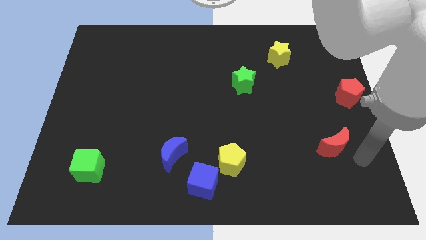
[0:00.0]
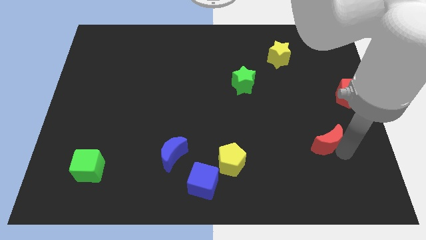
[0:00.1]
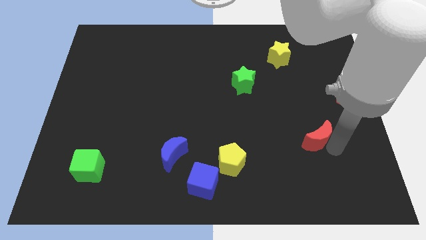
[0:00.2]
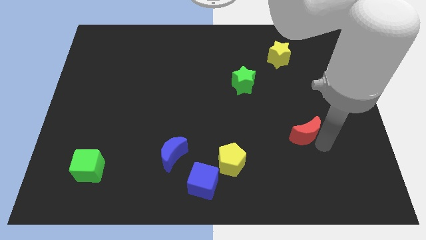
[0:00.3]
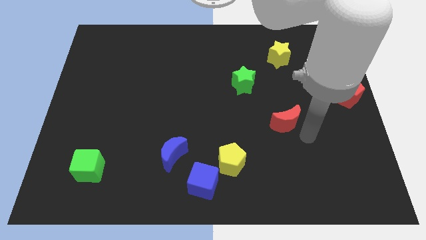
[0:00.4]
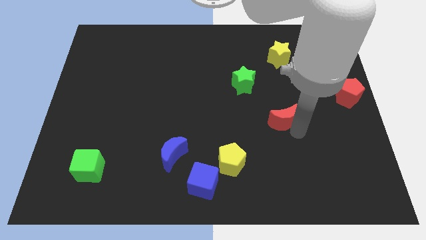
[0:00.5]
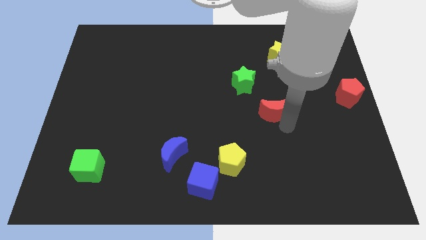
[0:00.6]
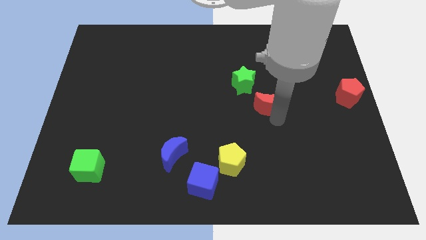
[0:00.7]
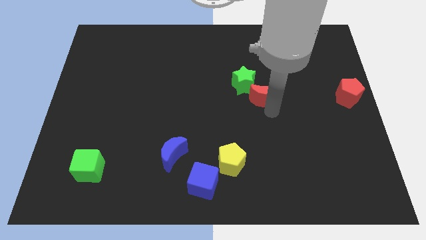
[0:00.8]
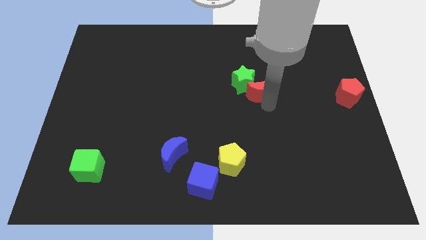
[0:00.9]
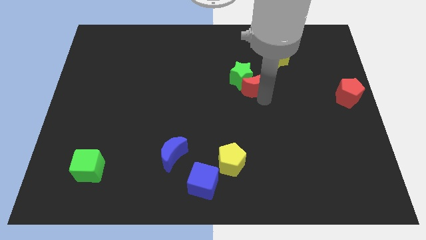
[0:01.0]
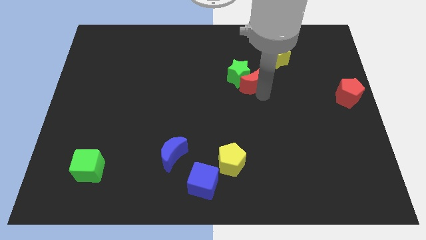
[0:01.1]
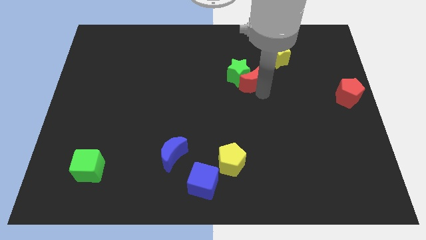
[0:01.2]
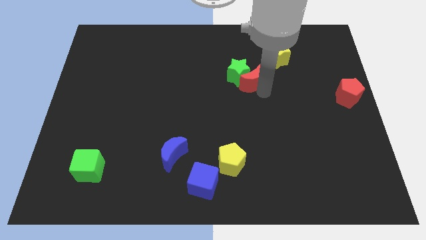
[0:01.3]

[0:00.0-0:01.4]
push the red moon into the green star

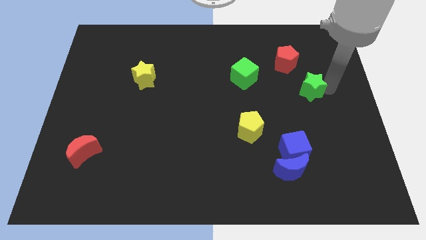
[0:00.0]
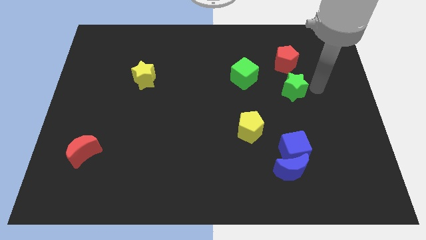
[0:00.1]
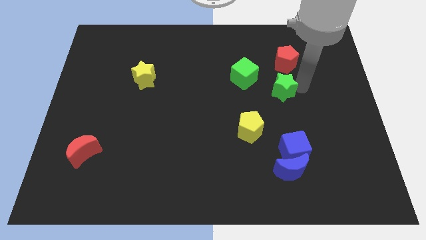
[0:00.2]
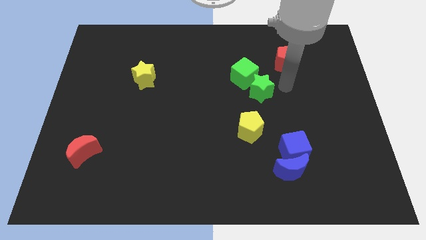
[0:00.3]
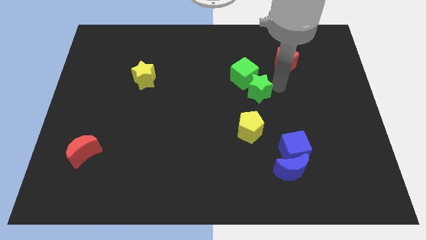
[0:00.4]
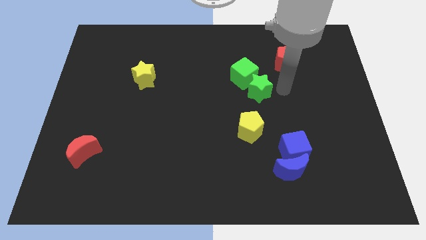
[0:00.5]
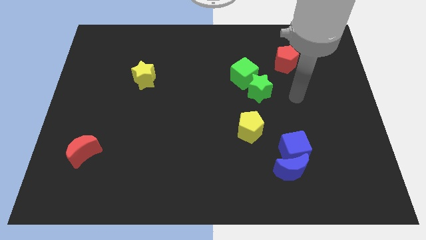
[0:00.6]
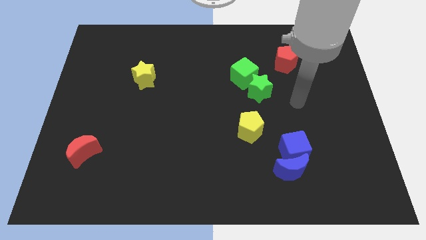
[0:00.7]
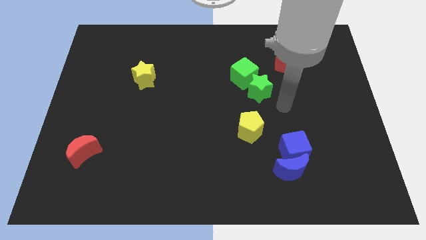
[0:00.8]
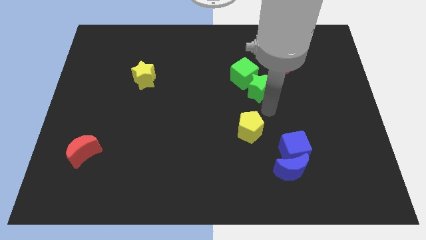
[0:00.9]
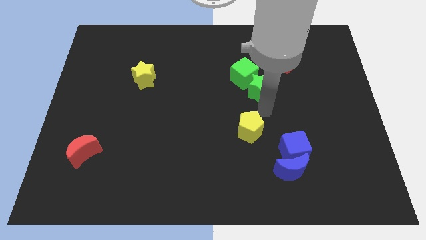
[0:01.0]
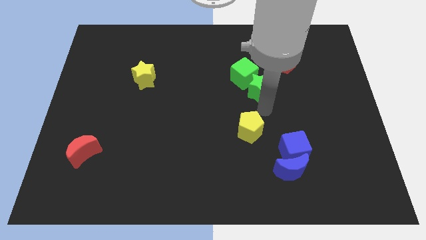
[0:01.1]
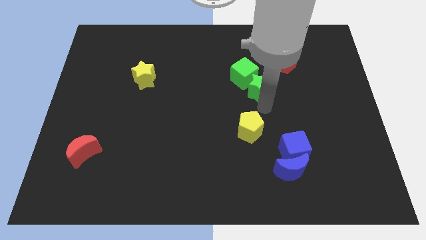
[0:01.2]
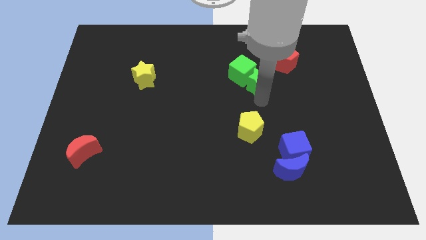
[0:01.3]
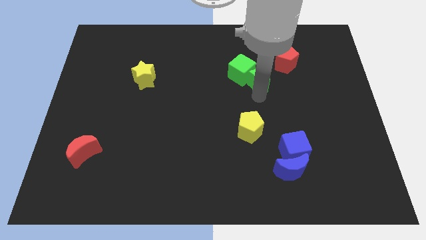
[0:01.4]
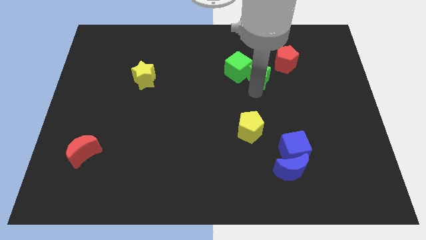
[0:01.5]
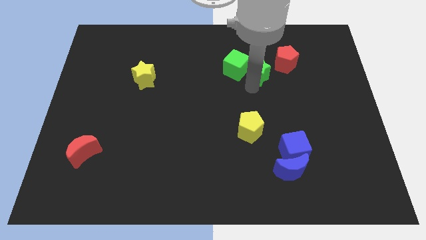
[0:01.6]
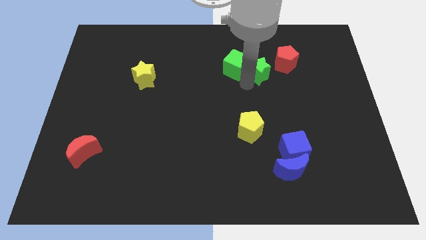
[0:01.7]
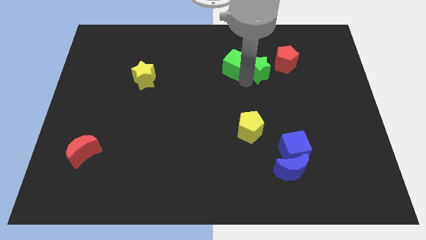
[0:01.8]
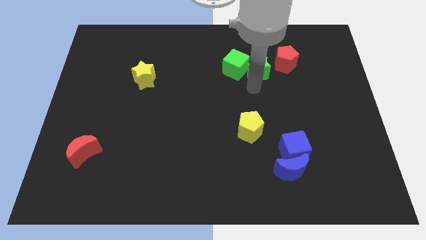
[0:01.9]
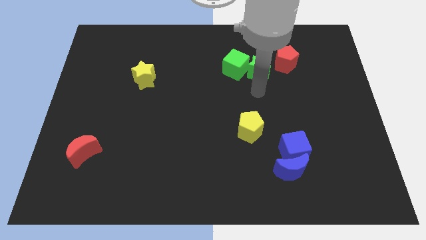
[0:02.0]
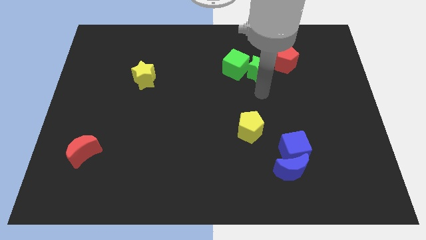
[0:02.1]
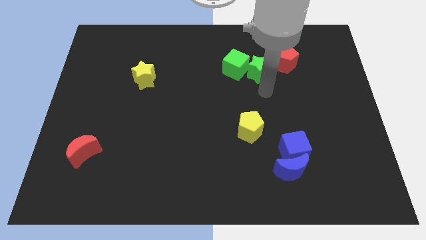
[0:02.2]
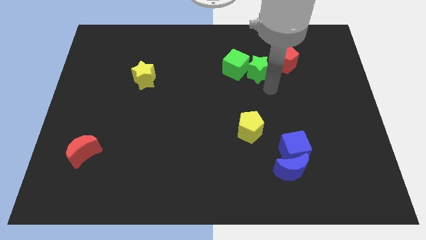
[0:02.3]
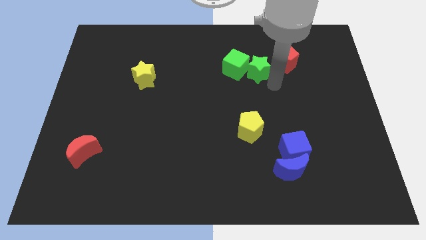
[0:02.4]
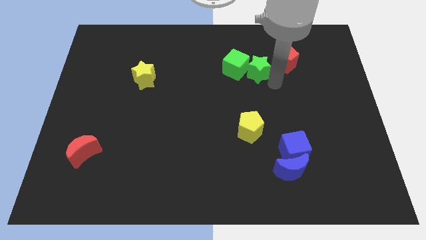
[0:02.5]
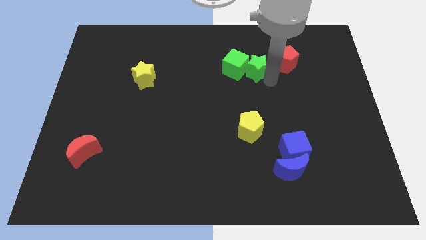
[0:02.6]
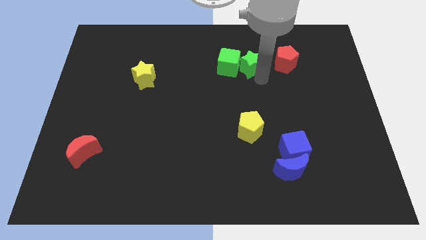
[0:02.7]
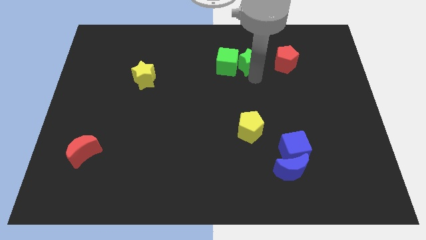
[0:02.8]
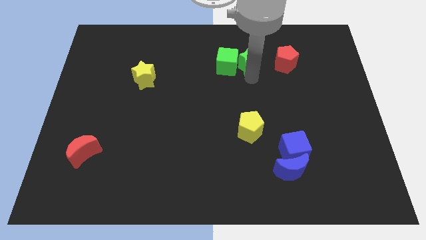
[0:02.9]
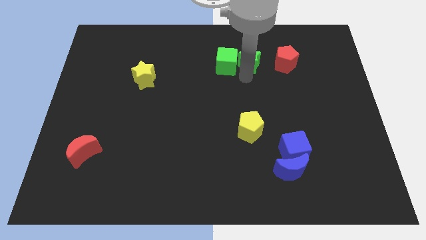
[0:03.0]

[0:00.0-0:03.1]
move the green blocks slightly up

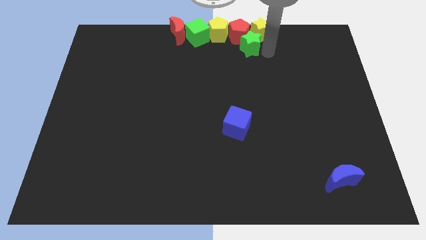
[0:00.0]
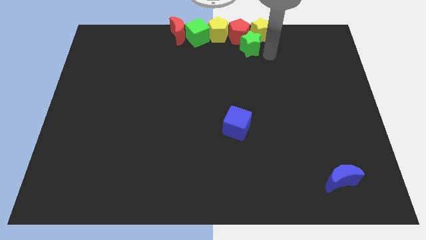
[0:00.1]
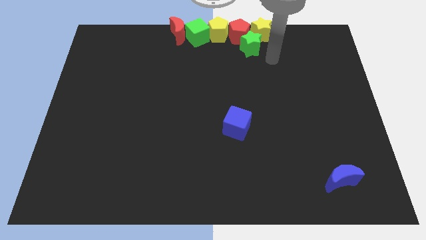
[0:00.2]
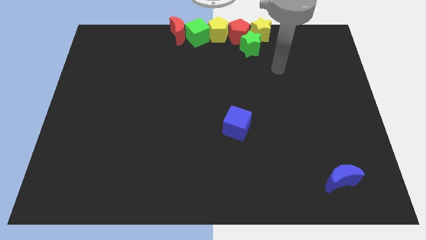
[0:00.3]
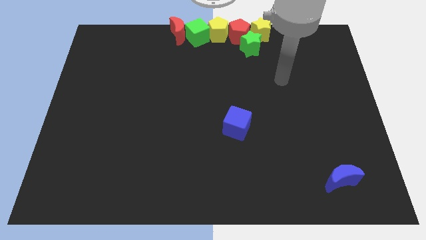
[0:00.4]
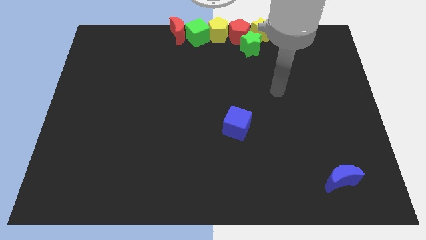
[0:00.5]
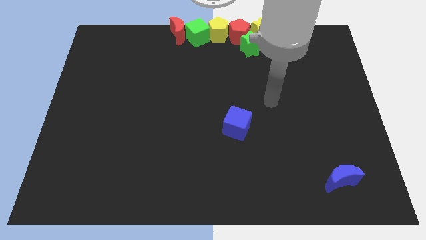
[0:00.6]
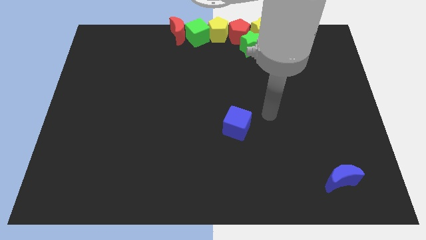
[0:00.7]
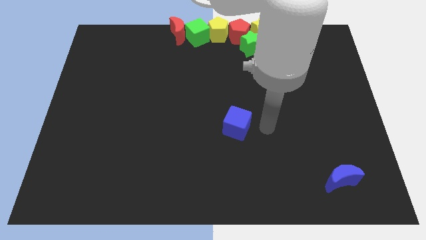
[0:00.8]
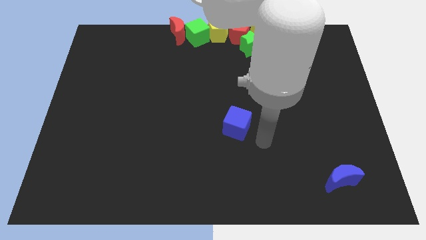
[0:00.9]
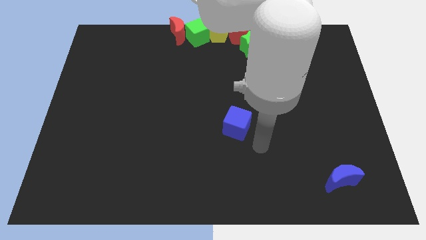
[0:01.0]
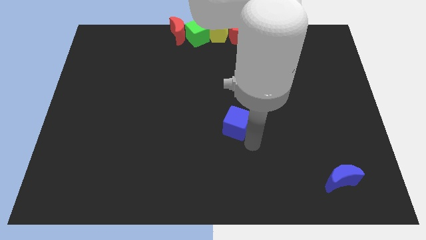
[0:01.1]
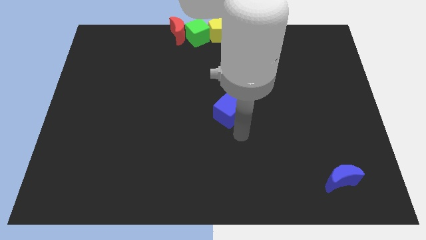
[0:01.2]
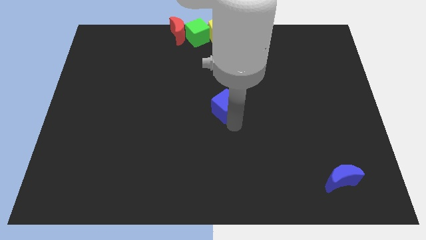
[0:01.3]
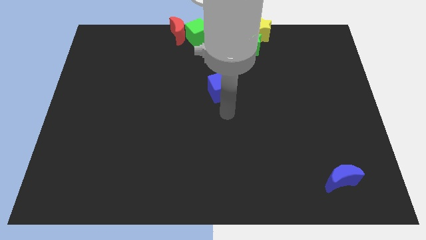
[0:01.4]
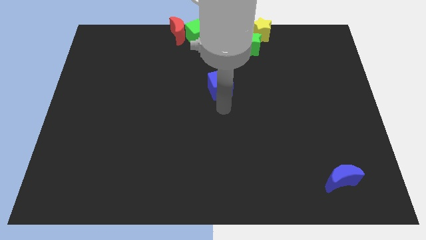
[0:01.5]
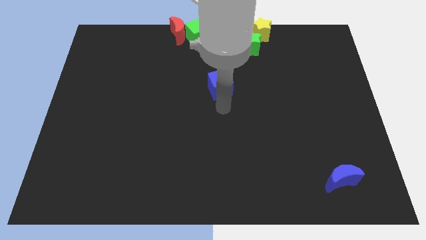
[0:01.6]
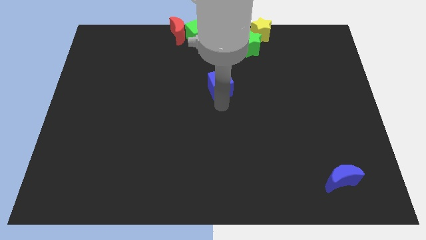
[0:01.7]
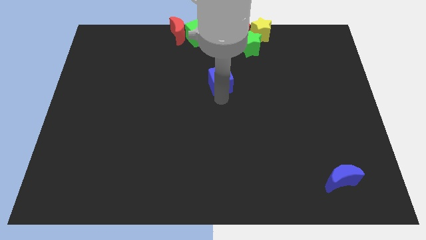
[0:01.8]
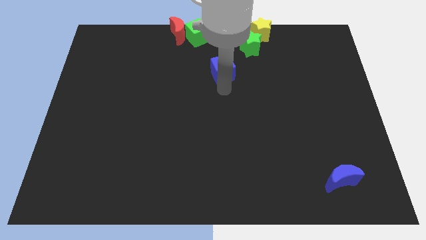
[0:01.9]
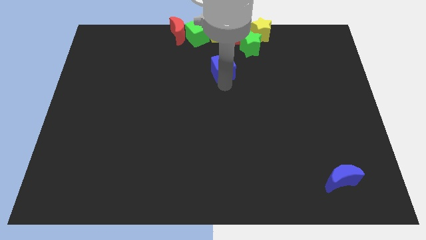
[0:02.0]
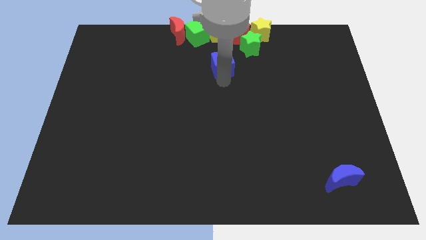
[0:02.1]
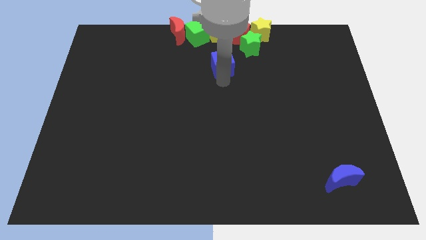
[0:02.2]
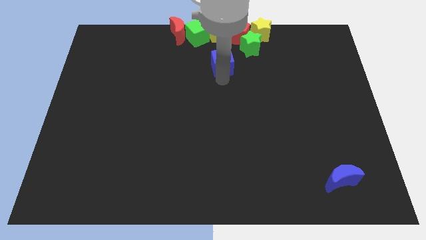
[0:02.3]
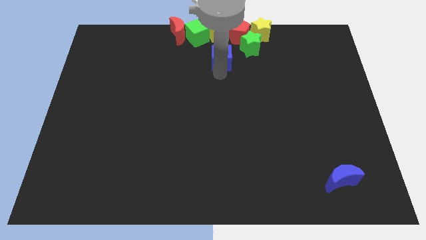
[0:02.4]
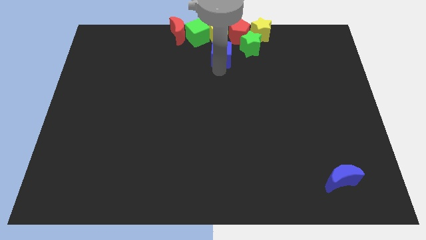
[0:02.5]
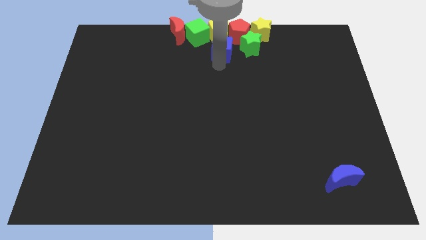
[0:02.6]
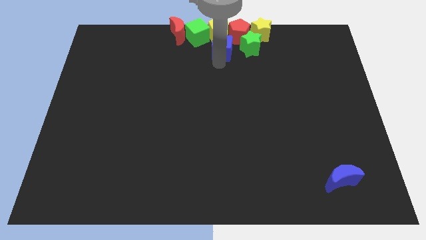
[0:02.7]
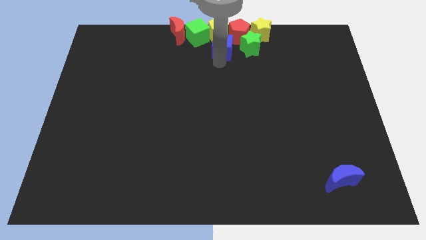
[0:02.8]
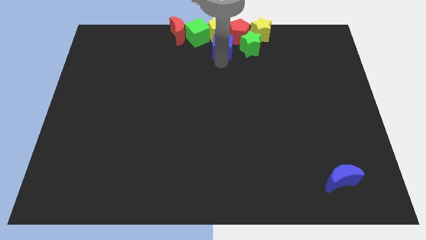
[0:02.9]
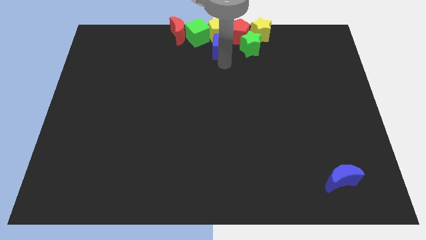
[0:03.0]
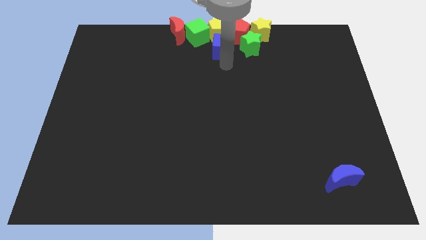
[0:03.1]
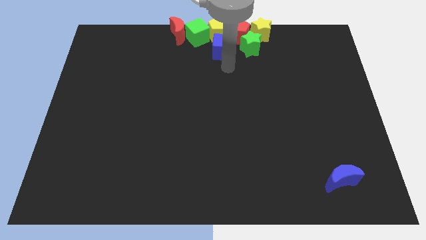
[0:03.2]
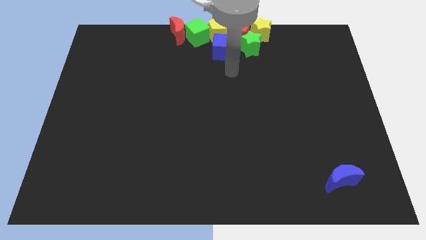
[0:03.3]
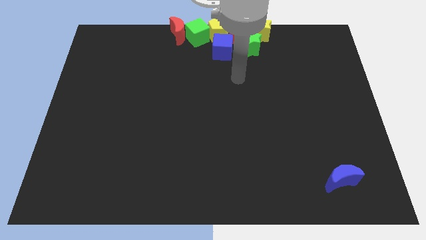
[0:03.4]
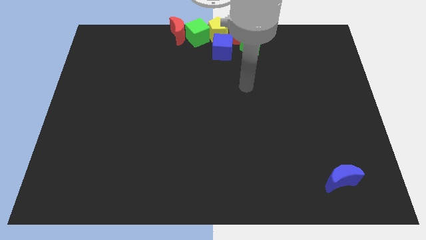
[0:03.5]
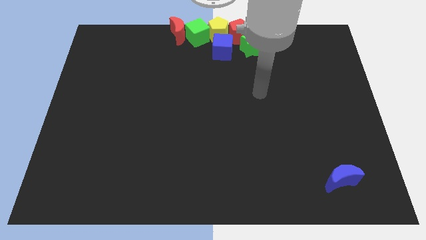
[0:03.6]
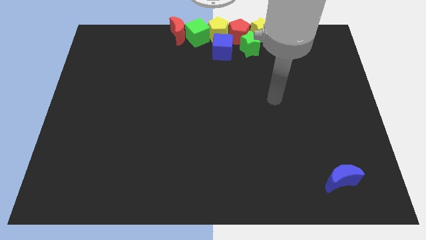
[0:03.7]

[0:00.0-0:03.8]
place the blue cube below the yellow pentagon

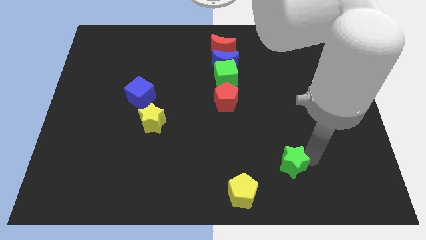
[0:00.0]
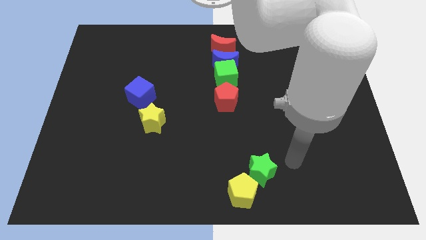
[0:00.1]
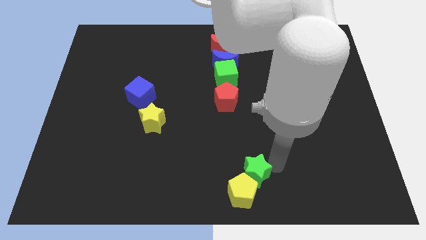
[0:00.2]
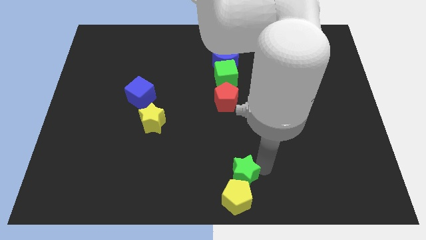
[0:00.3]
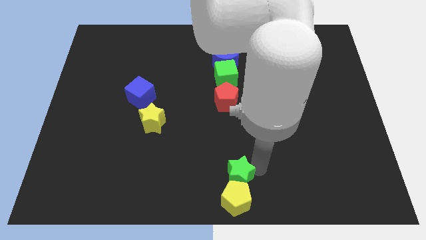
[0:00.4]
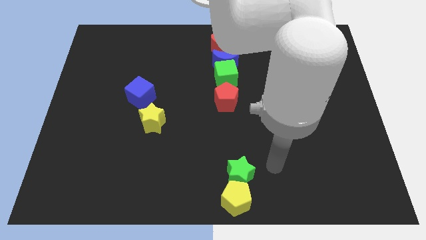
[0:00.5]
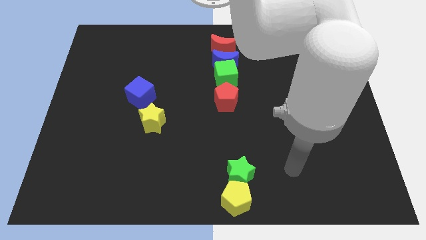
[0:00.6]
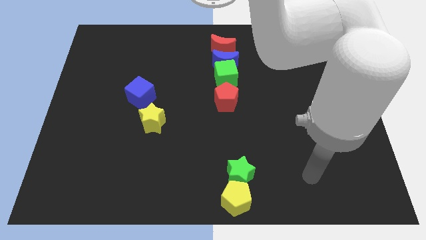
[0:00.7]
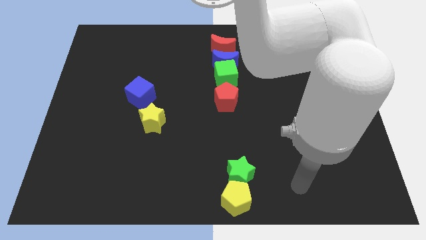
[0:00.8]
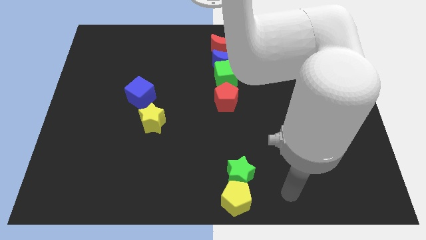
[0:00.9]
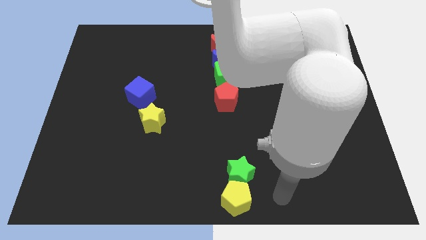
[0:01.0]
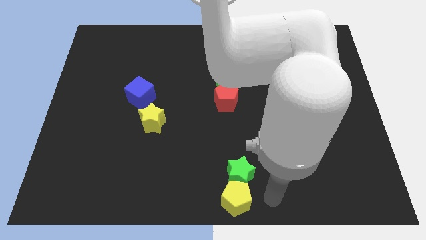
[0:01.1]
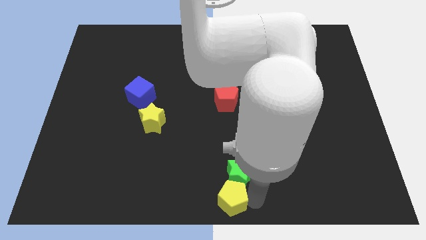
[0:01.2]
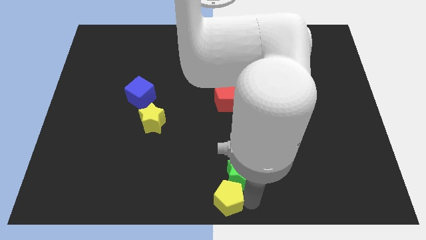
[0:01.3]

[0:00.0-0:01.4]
push the green star into the yellow pentagon
